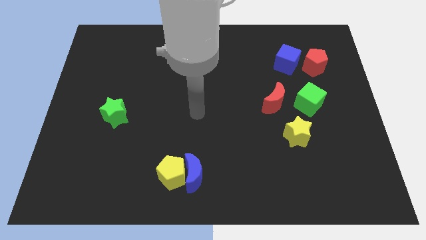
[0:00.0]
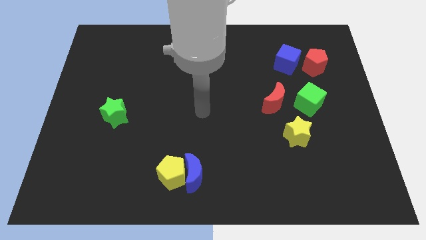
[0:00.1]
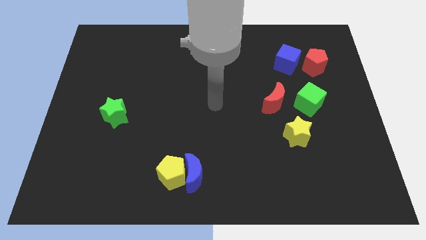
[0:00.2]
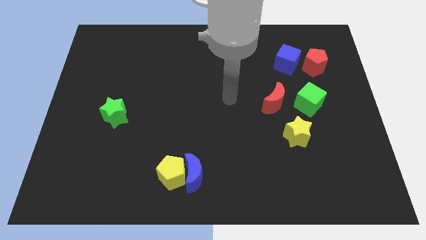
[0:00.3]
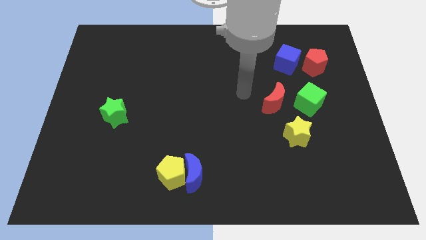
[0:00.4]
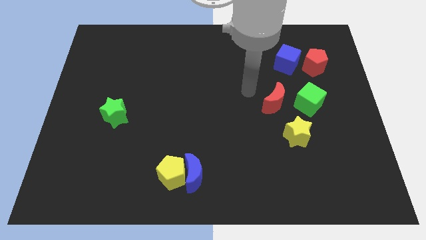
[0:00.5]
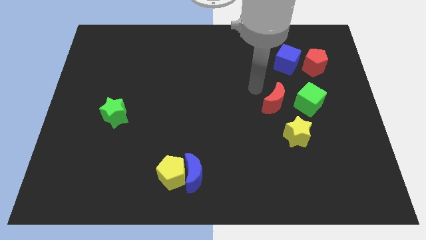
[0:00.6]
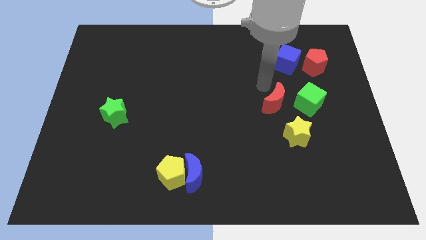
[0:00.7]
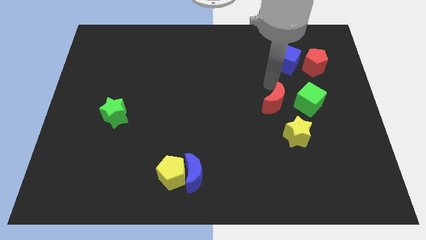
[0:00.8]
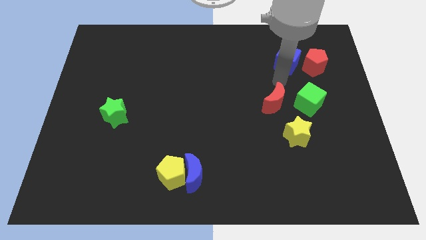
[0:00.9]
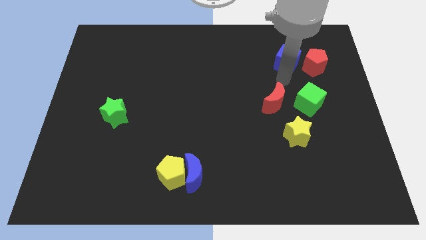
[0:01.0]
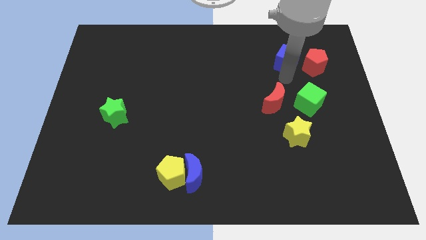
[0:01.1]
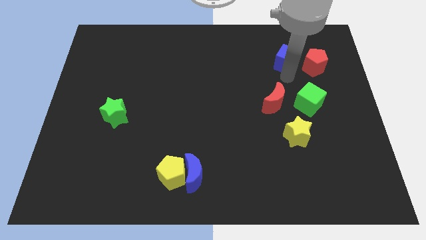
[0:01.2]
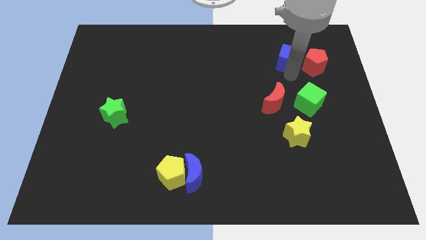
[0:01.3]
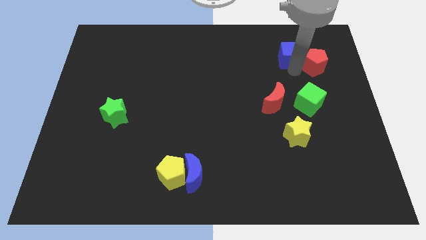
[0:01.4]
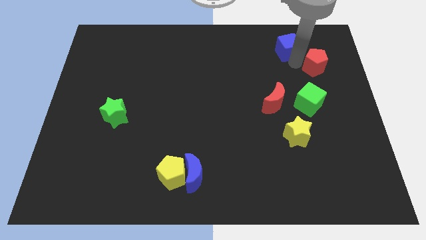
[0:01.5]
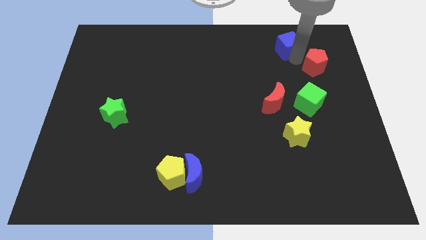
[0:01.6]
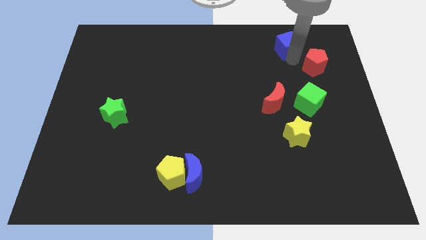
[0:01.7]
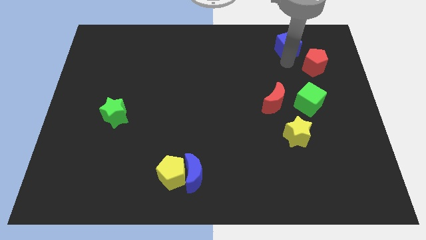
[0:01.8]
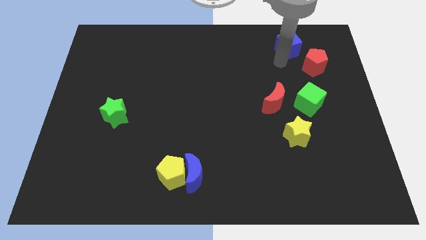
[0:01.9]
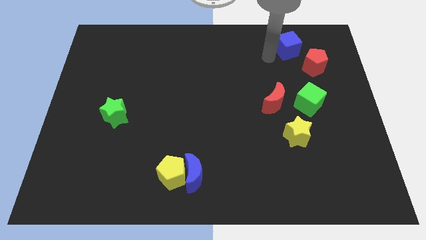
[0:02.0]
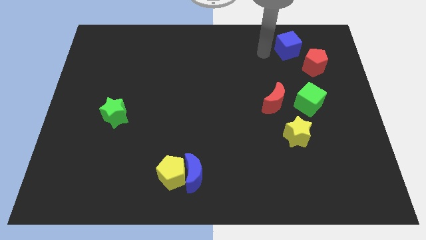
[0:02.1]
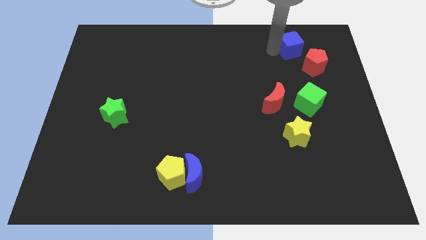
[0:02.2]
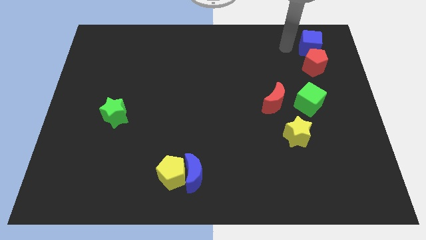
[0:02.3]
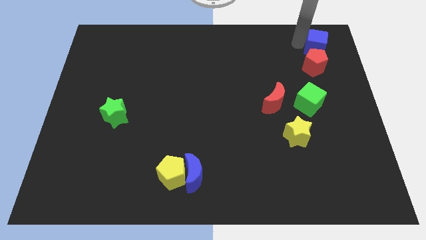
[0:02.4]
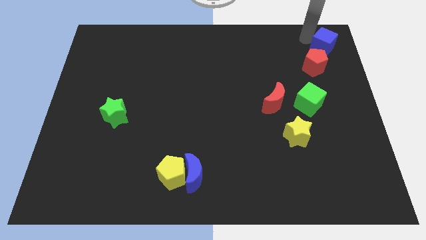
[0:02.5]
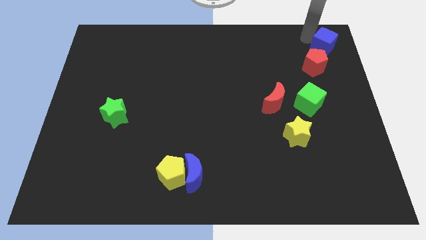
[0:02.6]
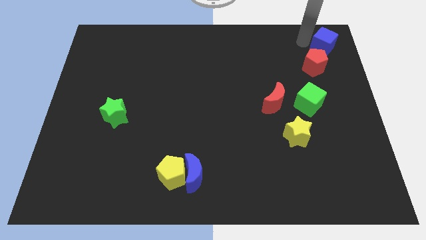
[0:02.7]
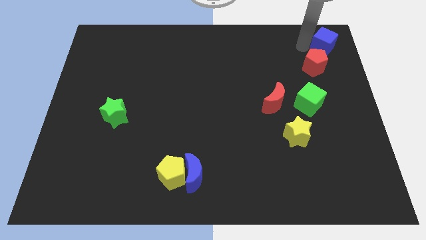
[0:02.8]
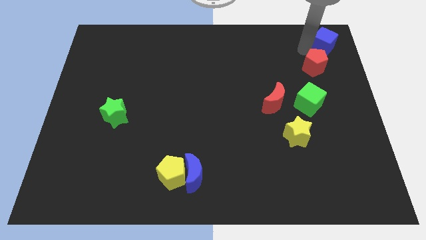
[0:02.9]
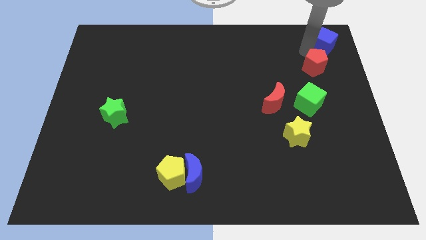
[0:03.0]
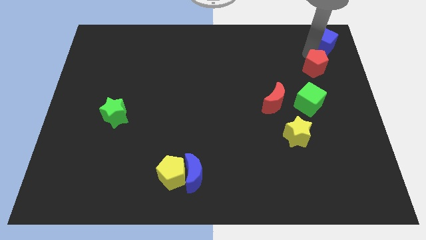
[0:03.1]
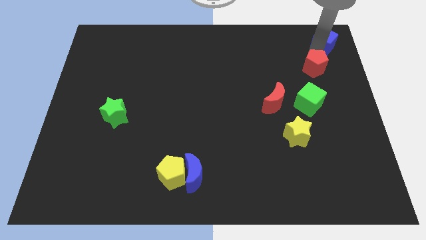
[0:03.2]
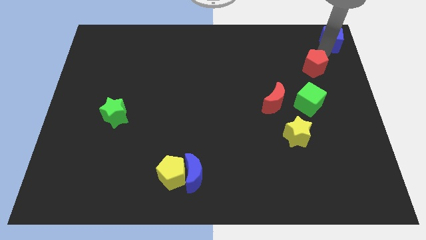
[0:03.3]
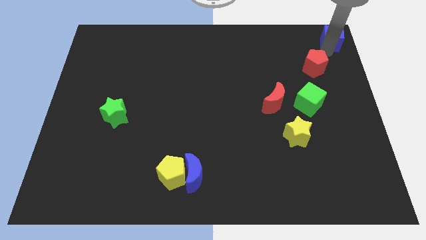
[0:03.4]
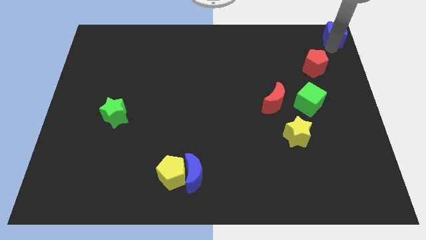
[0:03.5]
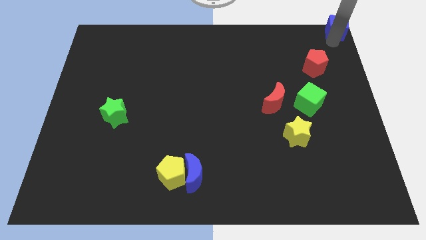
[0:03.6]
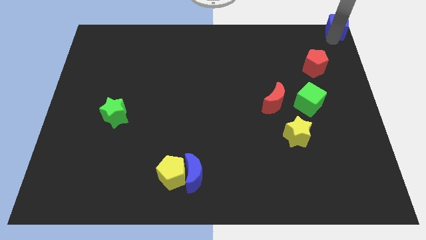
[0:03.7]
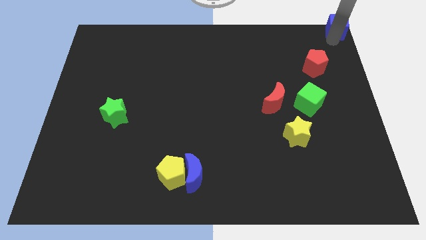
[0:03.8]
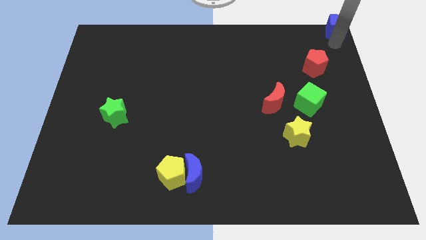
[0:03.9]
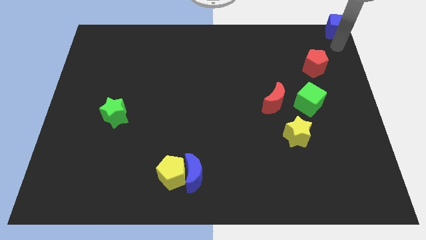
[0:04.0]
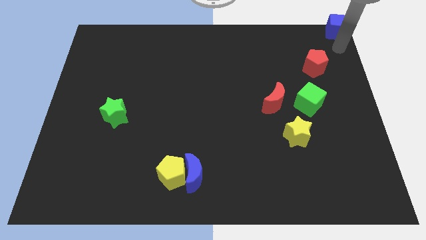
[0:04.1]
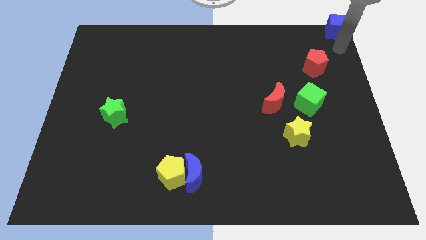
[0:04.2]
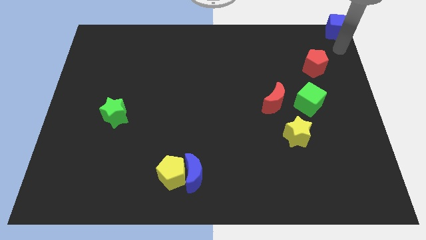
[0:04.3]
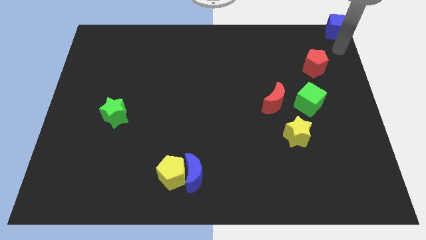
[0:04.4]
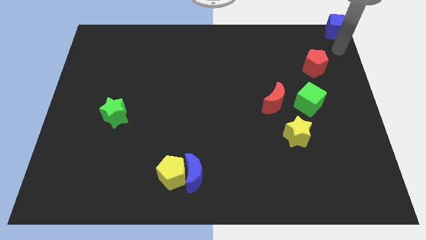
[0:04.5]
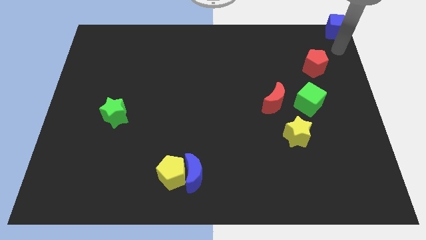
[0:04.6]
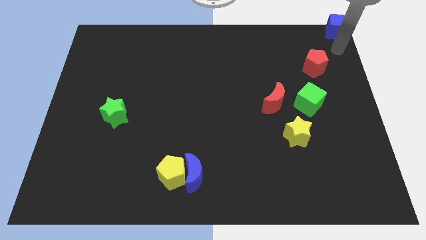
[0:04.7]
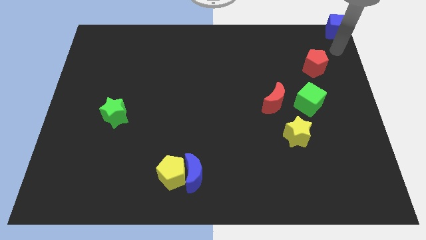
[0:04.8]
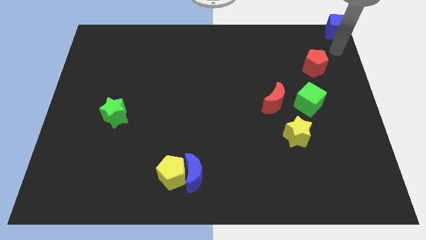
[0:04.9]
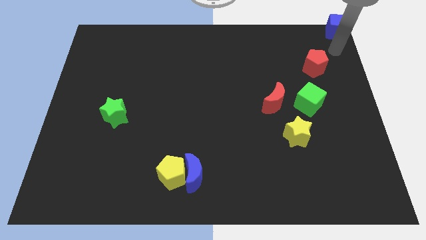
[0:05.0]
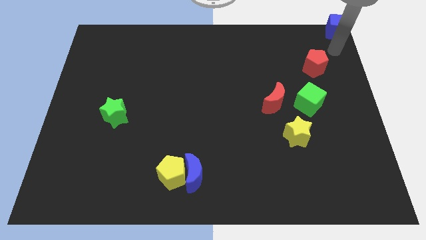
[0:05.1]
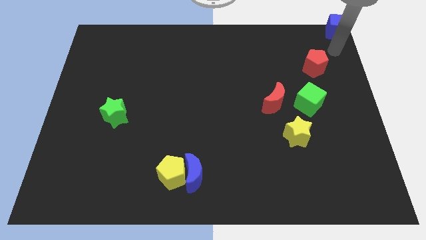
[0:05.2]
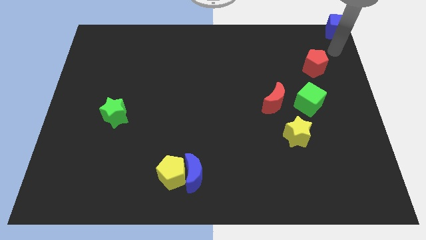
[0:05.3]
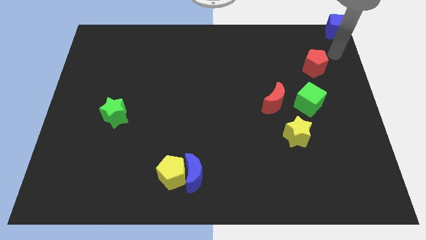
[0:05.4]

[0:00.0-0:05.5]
move the blue cube to the top right corner

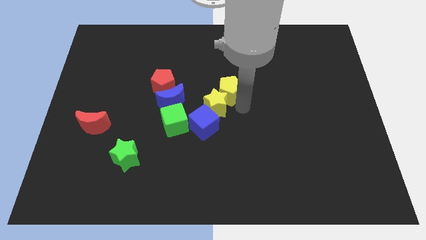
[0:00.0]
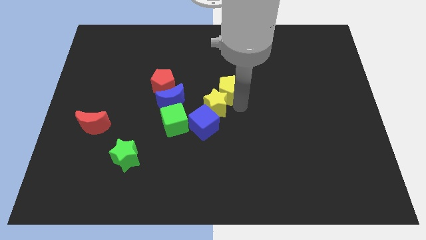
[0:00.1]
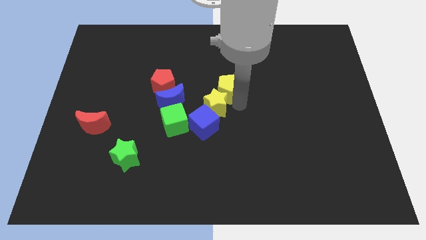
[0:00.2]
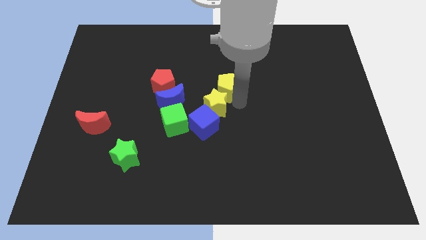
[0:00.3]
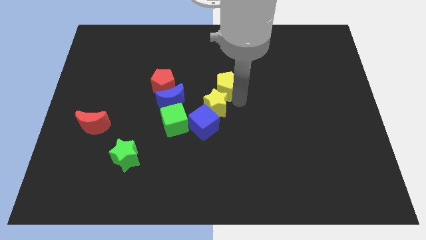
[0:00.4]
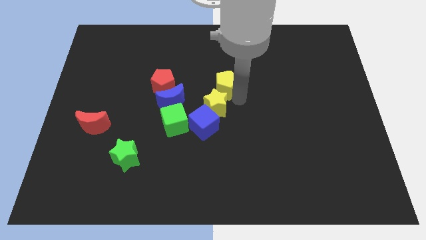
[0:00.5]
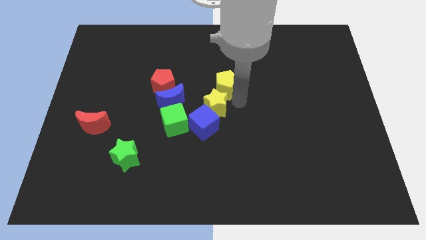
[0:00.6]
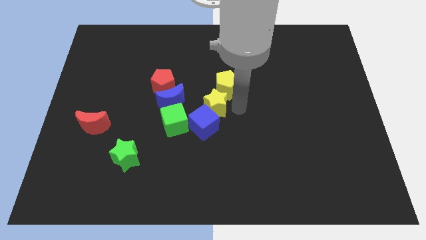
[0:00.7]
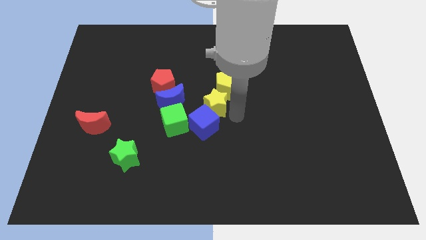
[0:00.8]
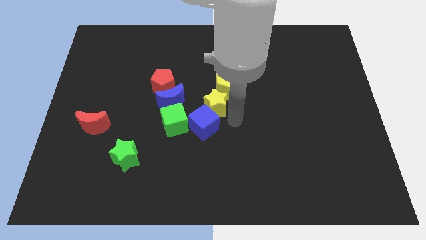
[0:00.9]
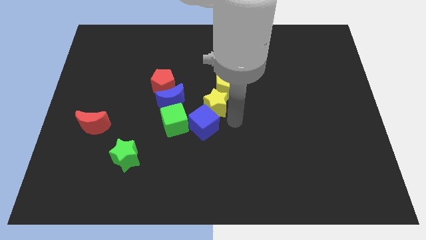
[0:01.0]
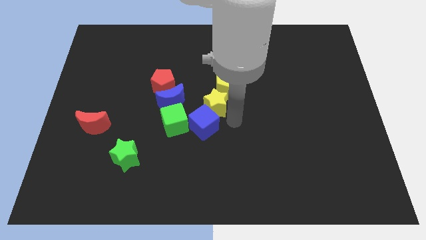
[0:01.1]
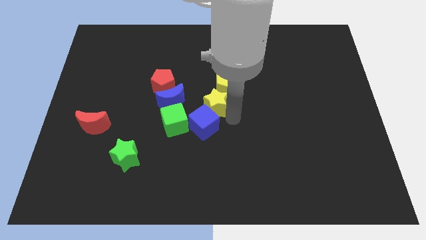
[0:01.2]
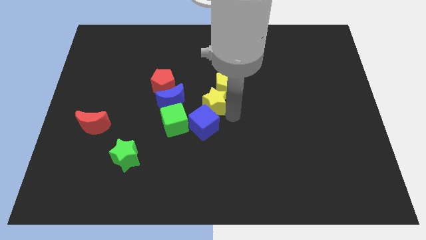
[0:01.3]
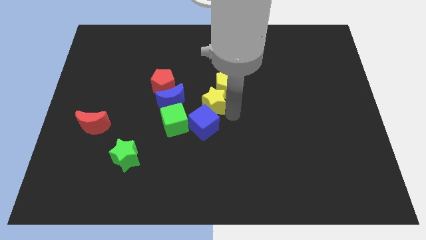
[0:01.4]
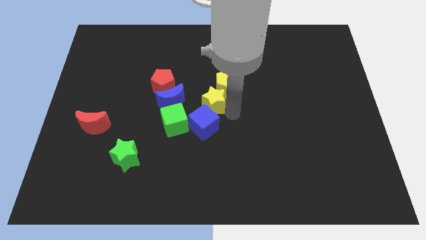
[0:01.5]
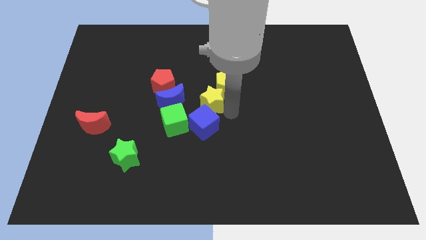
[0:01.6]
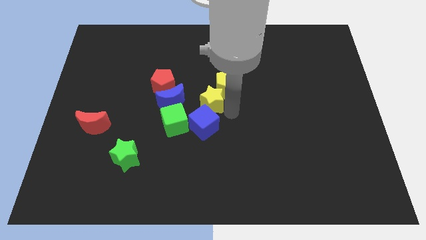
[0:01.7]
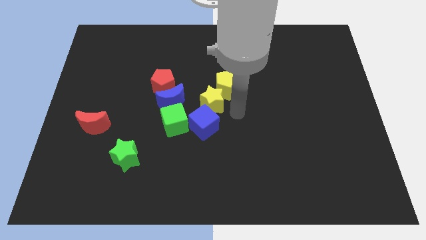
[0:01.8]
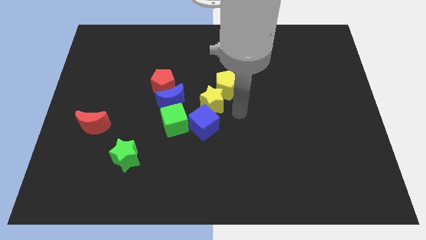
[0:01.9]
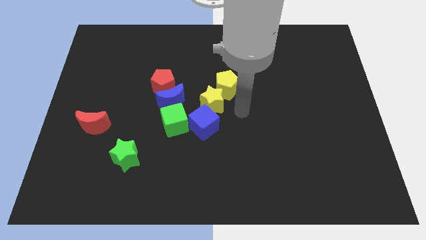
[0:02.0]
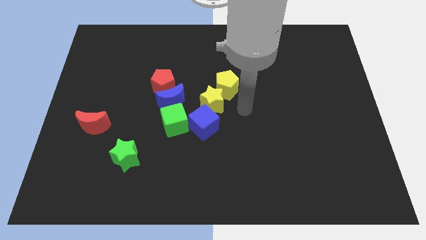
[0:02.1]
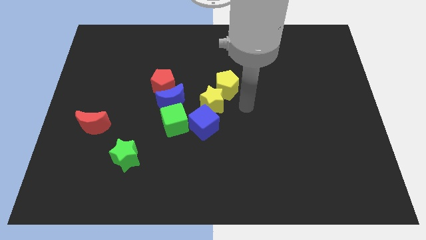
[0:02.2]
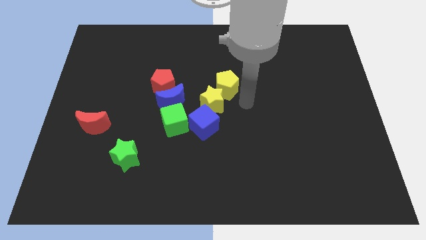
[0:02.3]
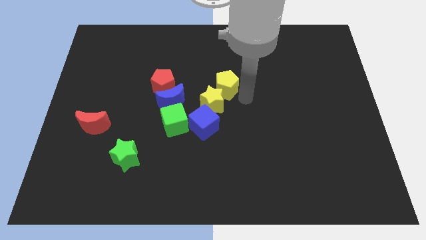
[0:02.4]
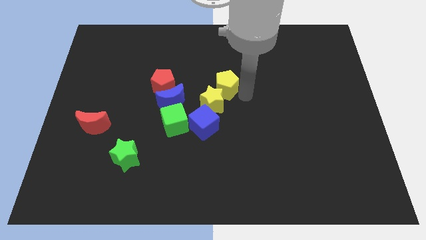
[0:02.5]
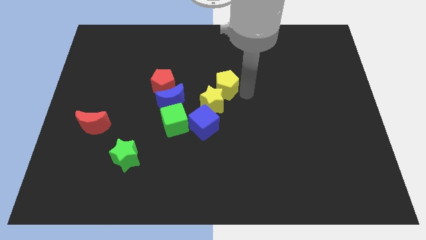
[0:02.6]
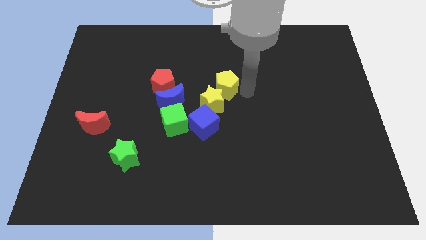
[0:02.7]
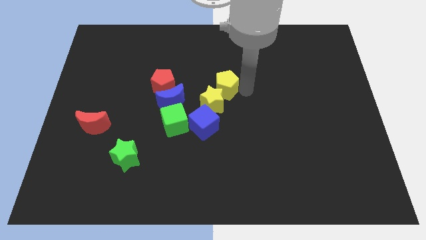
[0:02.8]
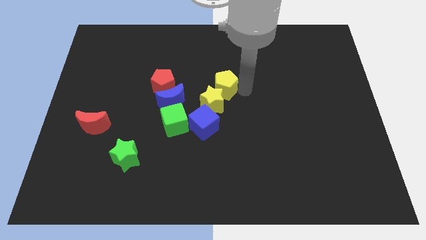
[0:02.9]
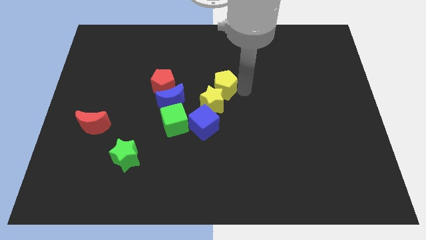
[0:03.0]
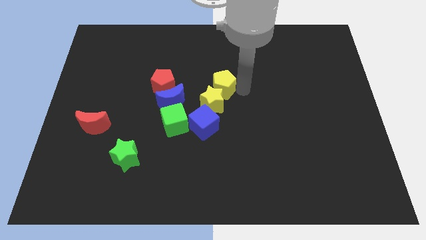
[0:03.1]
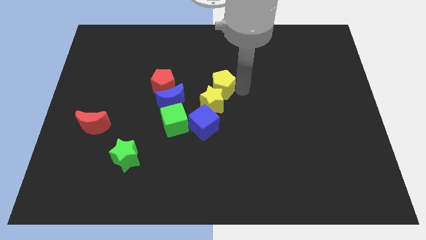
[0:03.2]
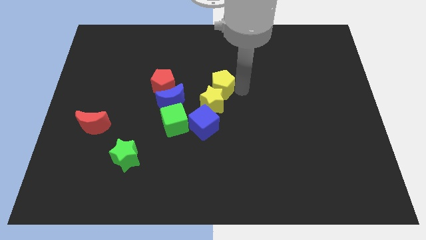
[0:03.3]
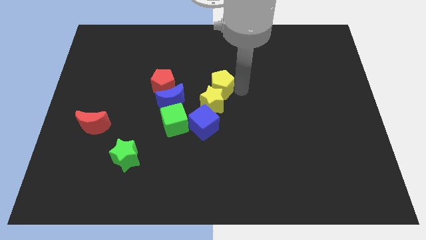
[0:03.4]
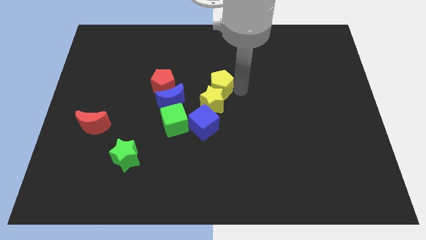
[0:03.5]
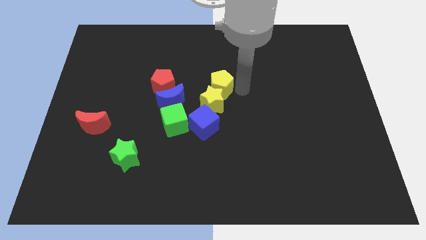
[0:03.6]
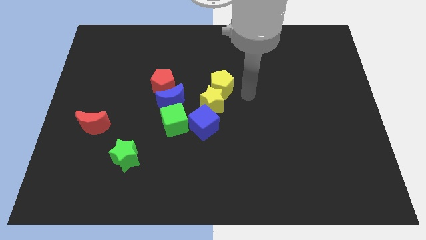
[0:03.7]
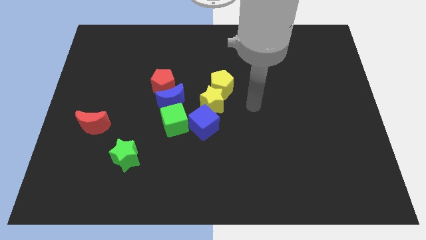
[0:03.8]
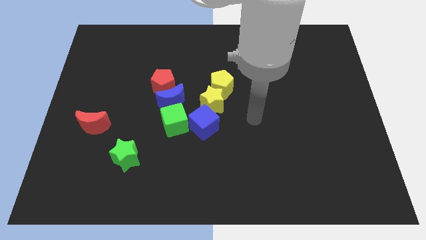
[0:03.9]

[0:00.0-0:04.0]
adjust the yellow star and yellow pentagon on the top of the blue cube
